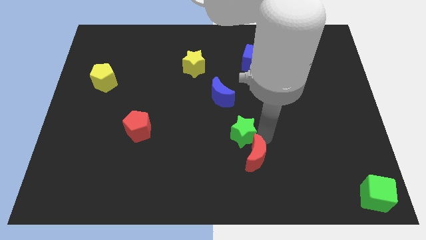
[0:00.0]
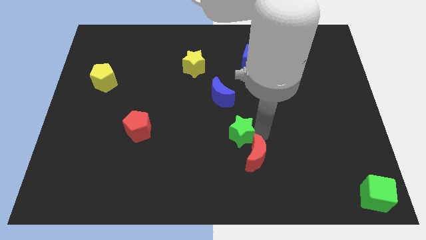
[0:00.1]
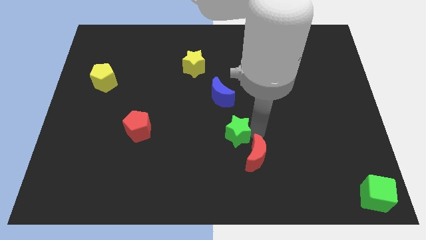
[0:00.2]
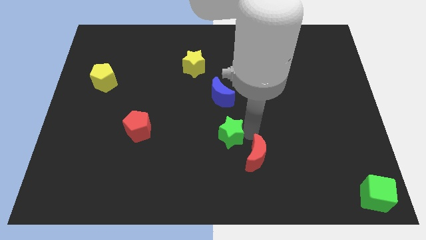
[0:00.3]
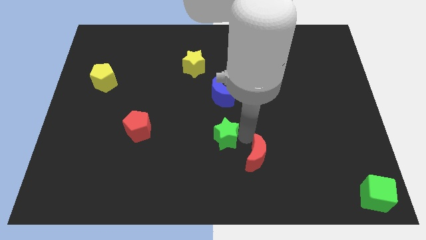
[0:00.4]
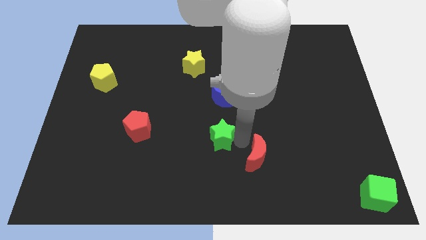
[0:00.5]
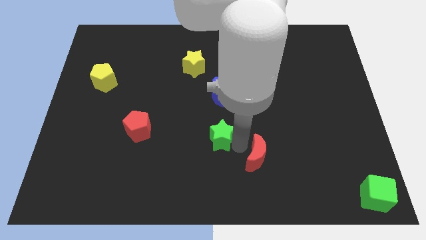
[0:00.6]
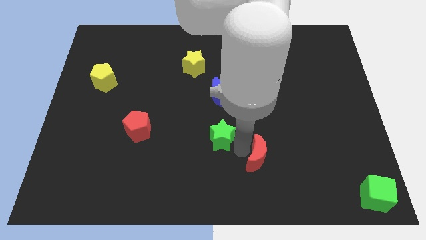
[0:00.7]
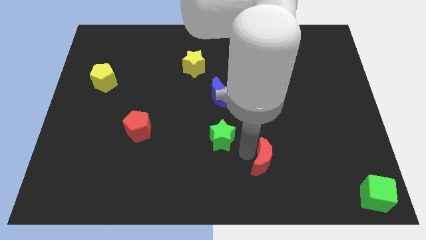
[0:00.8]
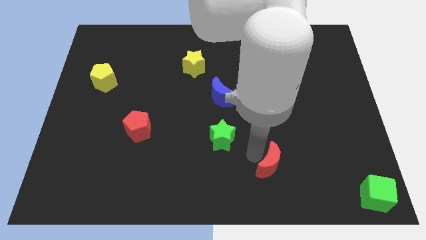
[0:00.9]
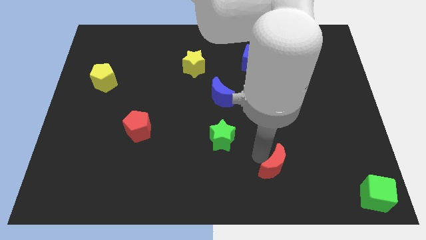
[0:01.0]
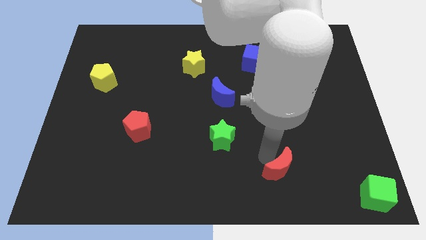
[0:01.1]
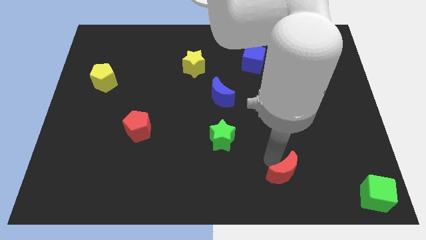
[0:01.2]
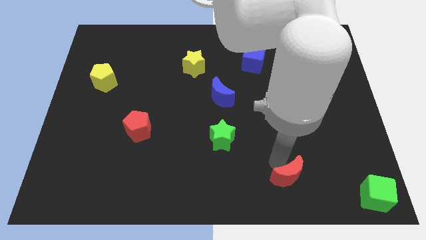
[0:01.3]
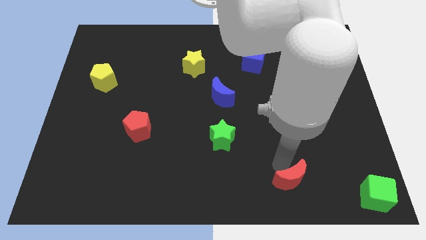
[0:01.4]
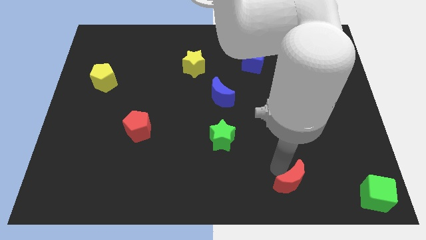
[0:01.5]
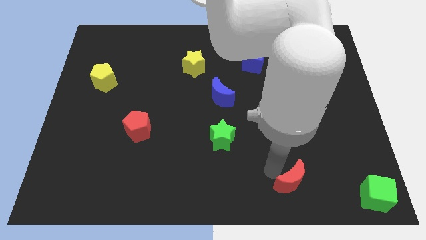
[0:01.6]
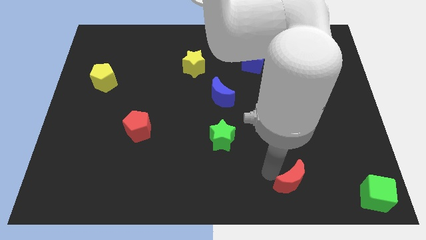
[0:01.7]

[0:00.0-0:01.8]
separate the green star and red moon

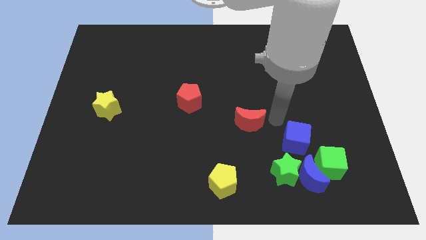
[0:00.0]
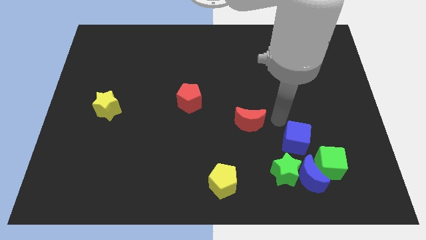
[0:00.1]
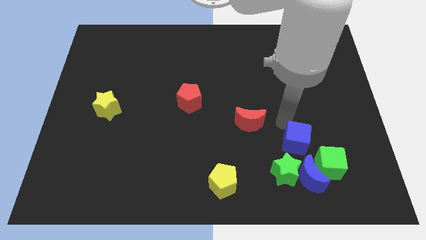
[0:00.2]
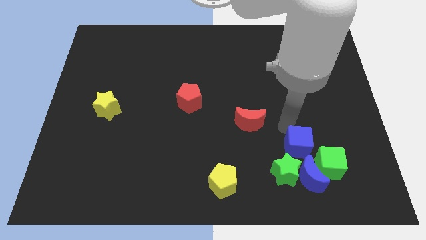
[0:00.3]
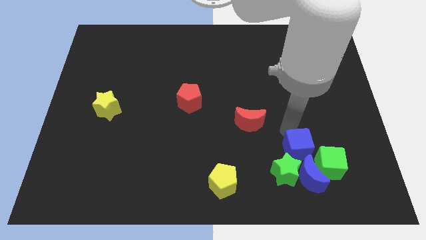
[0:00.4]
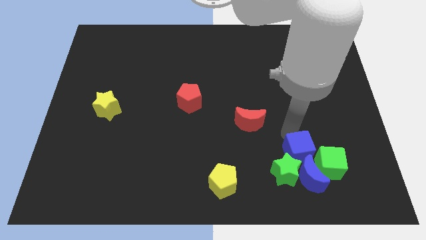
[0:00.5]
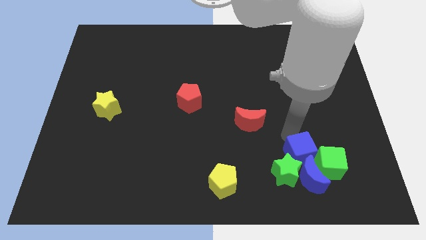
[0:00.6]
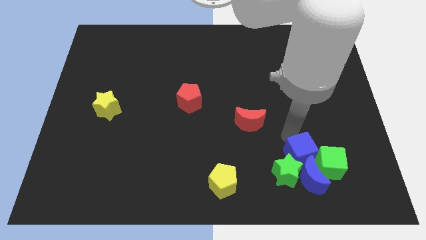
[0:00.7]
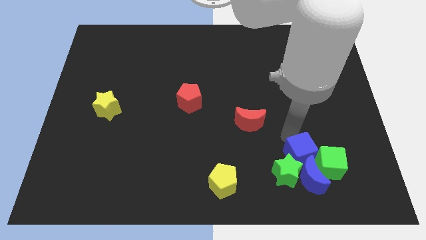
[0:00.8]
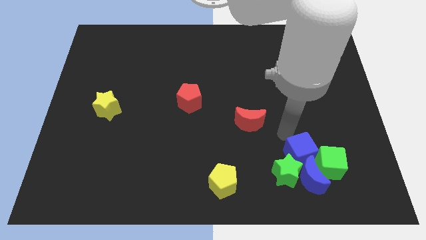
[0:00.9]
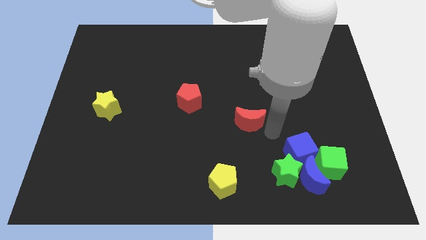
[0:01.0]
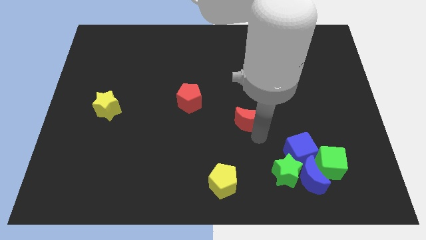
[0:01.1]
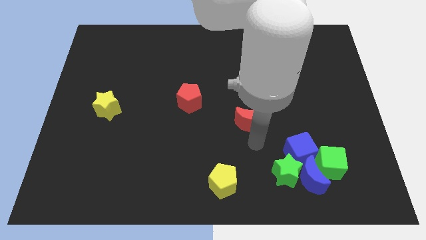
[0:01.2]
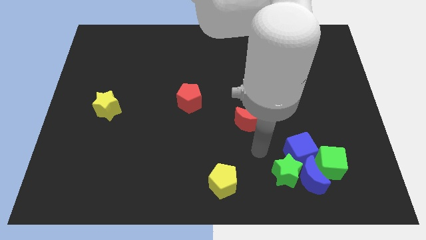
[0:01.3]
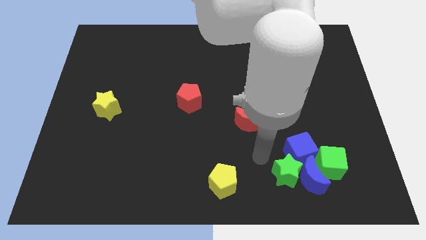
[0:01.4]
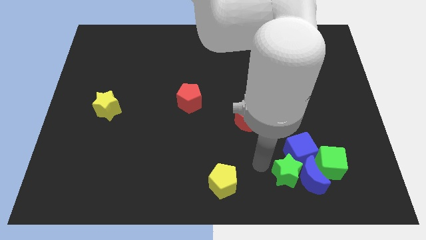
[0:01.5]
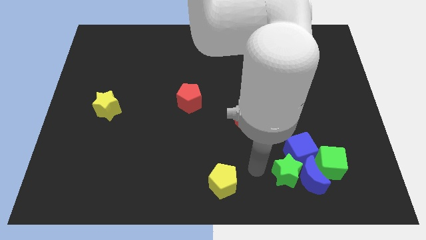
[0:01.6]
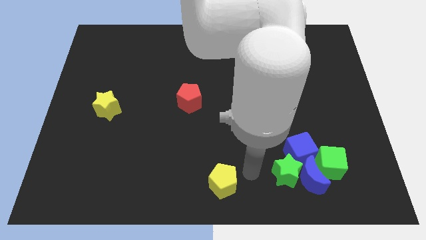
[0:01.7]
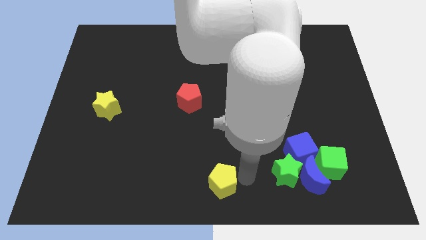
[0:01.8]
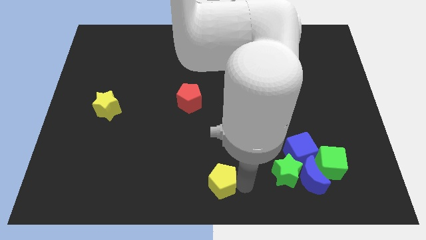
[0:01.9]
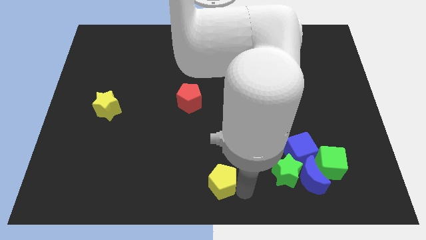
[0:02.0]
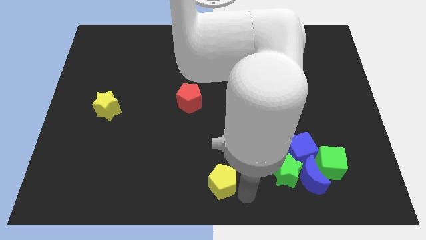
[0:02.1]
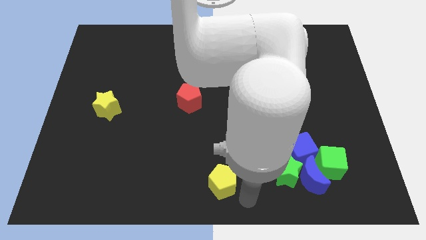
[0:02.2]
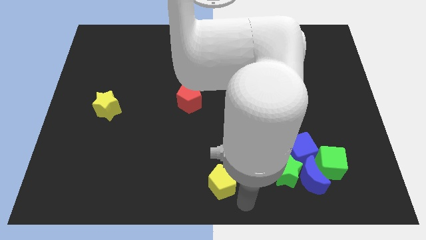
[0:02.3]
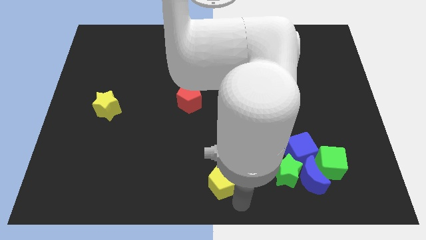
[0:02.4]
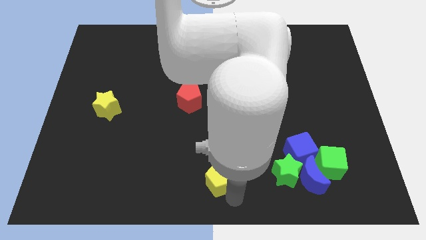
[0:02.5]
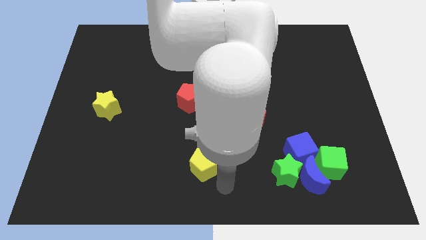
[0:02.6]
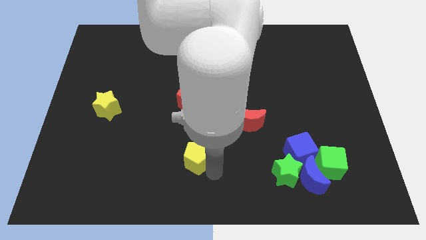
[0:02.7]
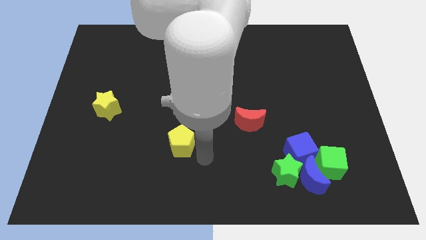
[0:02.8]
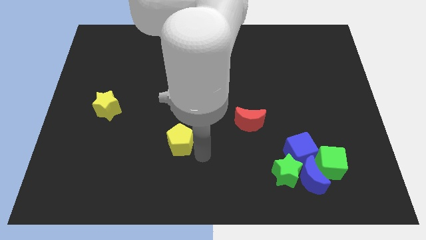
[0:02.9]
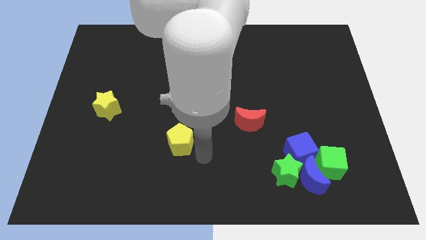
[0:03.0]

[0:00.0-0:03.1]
move the yellow pentagon below the red pentagon

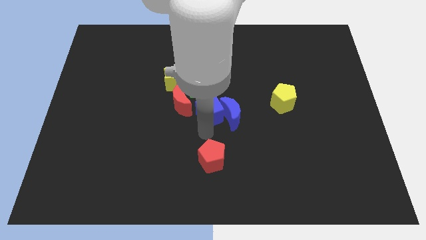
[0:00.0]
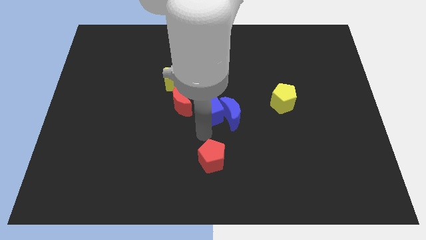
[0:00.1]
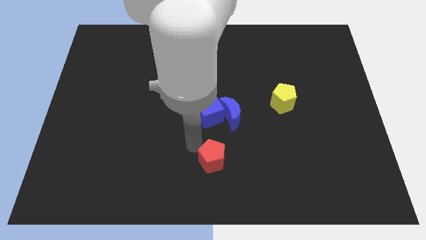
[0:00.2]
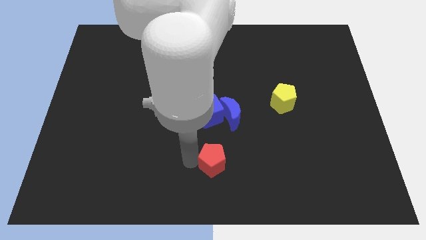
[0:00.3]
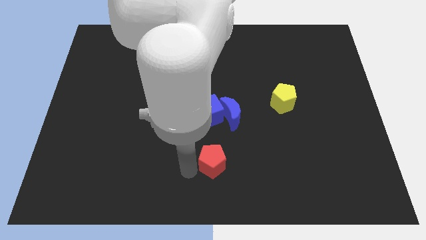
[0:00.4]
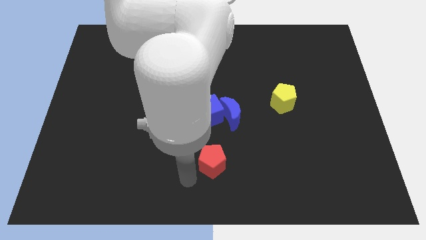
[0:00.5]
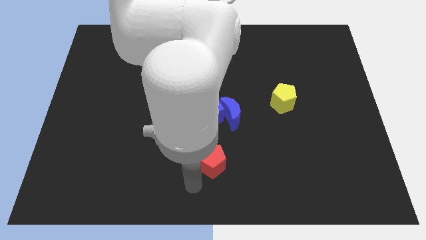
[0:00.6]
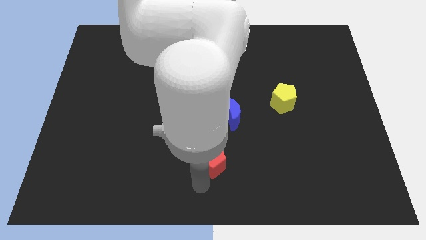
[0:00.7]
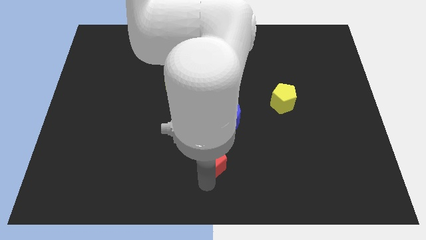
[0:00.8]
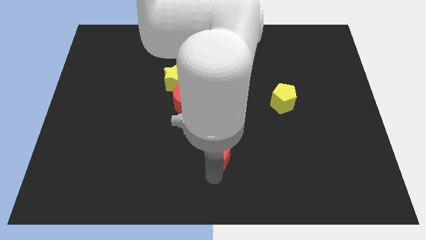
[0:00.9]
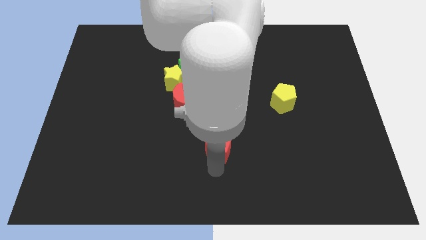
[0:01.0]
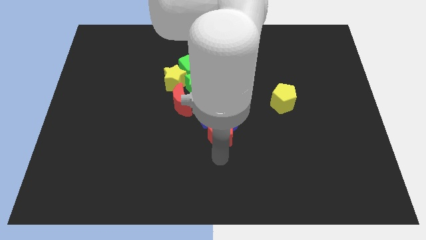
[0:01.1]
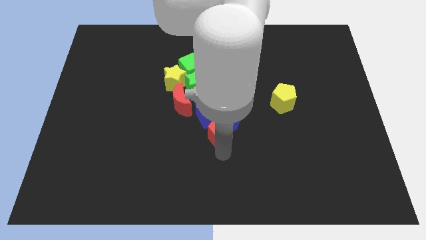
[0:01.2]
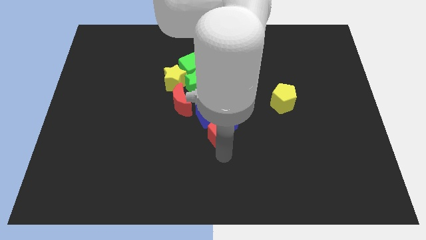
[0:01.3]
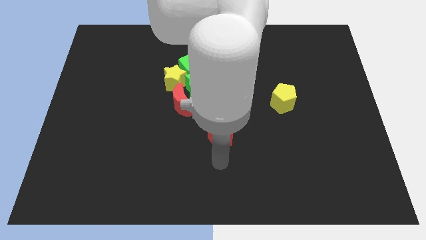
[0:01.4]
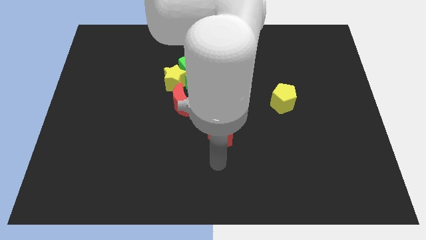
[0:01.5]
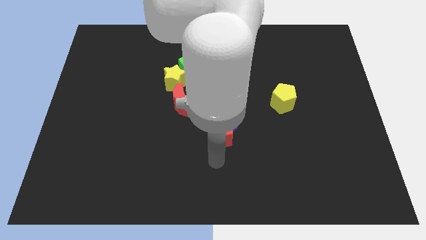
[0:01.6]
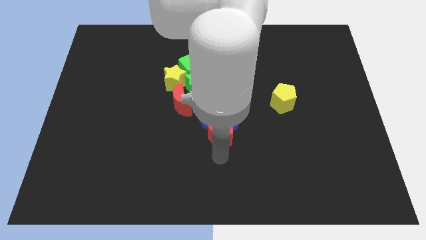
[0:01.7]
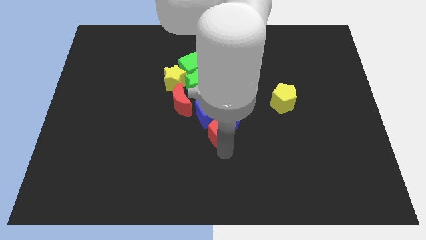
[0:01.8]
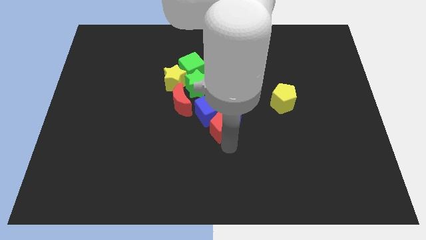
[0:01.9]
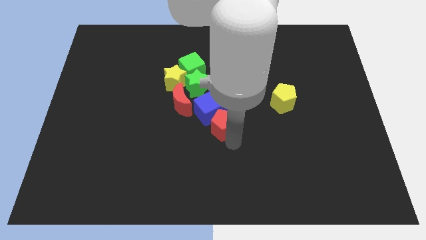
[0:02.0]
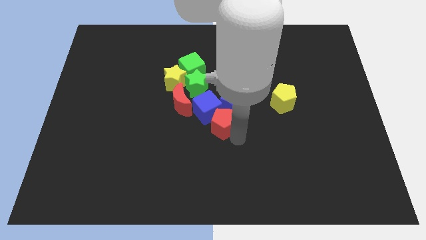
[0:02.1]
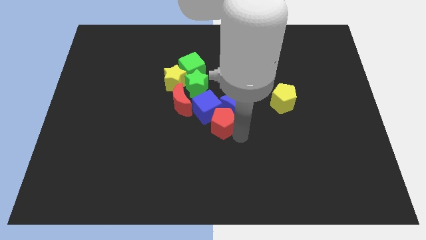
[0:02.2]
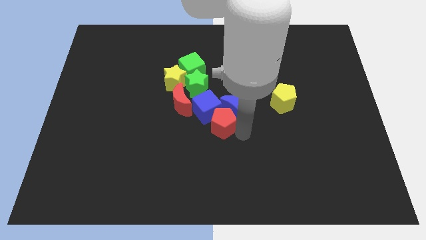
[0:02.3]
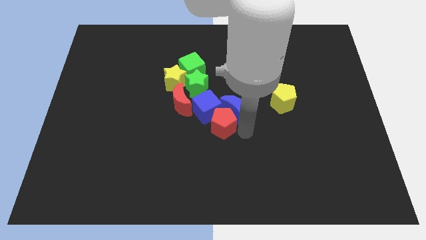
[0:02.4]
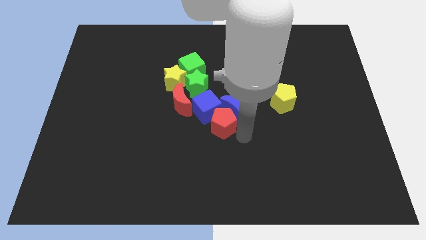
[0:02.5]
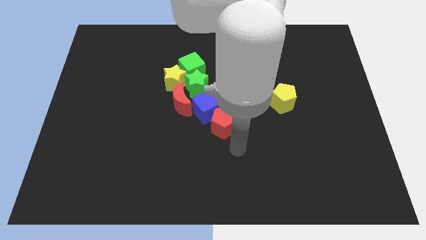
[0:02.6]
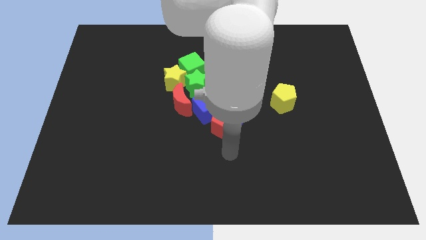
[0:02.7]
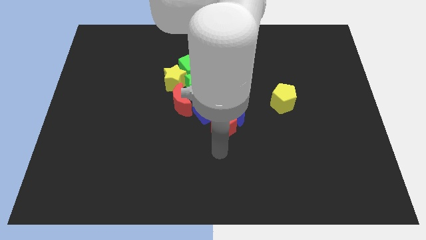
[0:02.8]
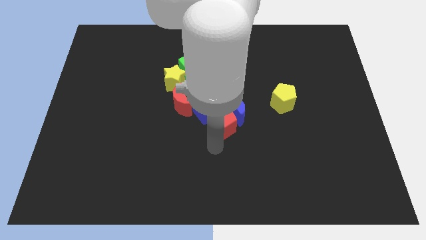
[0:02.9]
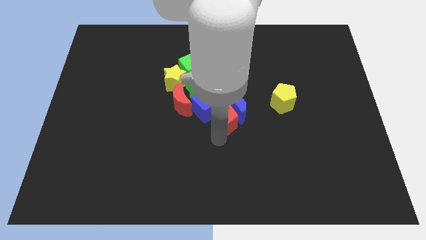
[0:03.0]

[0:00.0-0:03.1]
push red pentagon into blue blocks

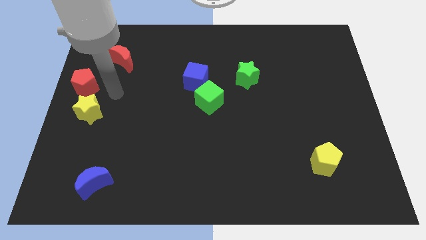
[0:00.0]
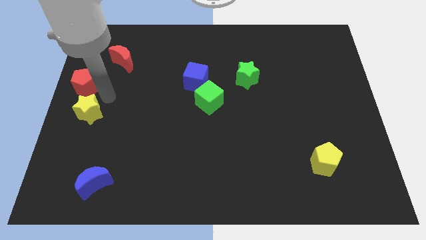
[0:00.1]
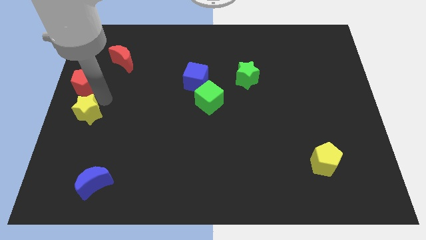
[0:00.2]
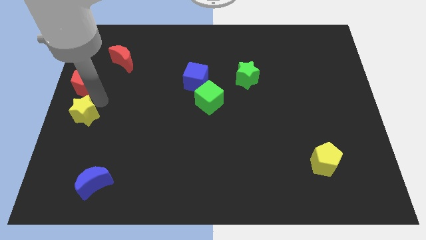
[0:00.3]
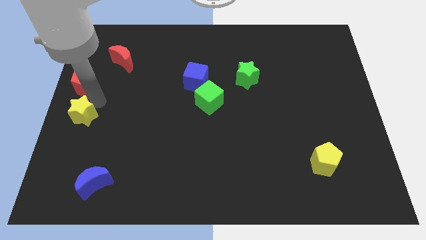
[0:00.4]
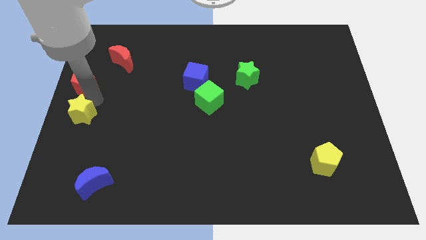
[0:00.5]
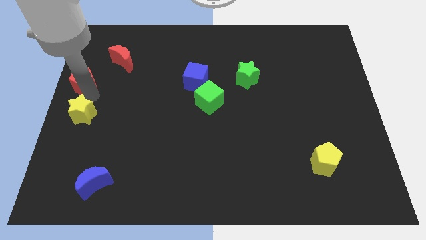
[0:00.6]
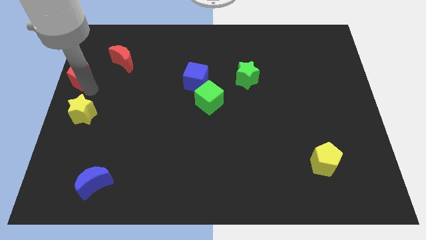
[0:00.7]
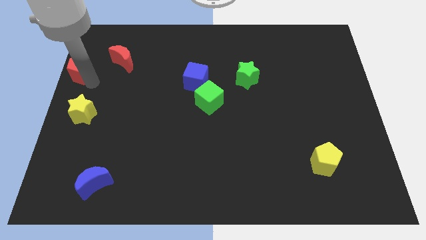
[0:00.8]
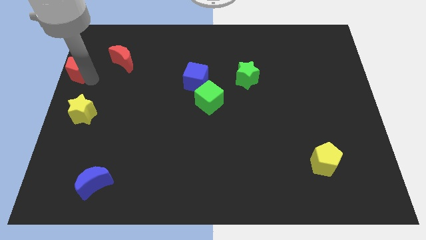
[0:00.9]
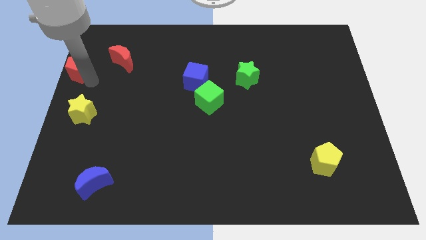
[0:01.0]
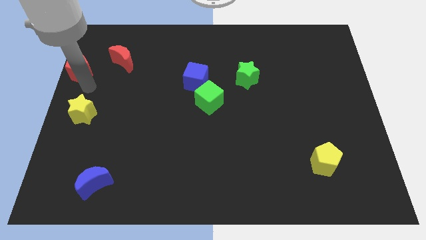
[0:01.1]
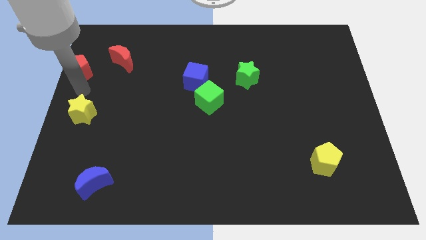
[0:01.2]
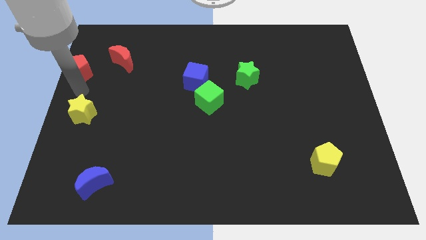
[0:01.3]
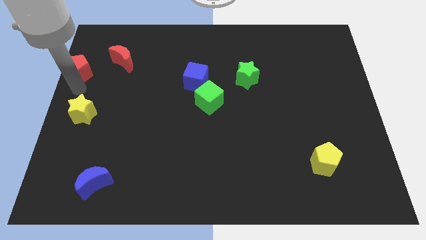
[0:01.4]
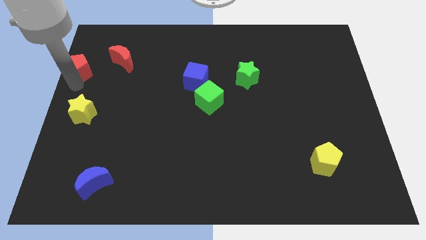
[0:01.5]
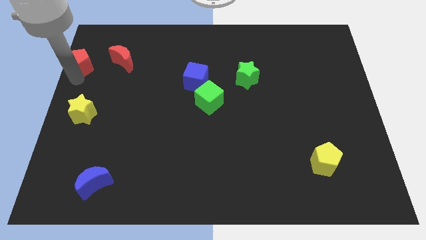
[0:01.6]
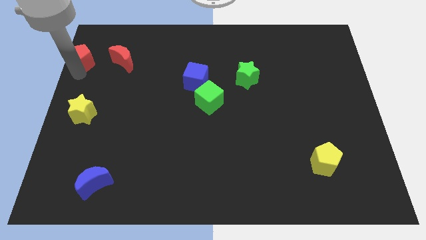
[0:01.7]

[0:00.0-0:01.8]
separate the yellow star and red pentagon
